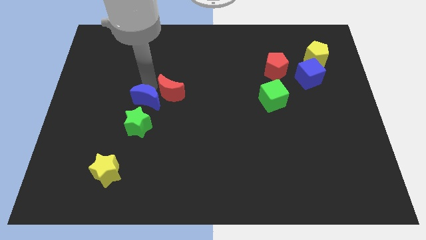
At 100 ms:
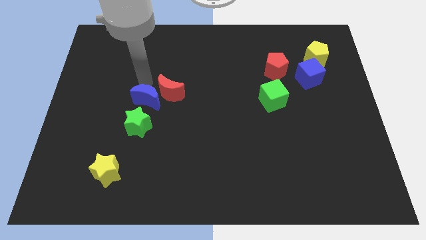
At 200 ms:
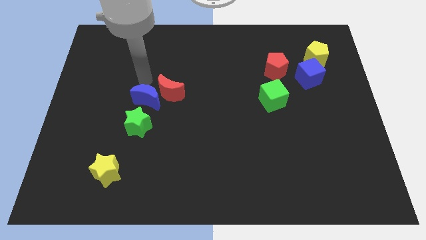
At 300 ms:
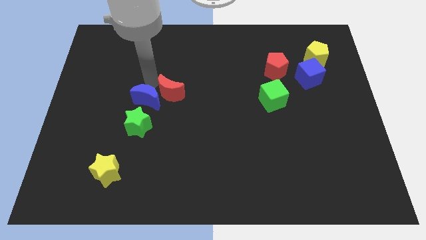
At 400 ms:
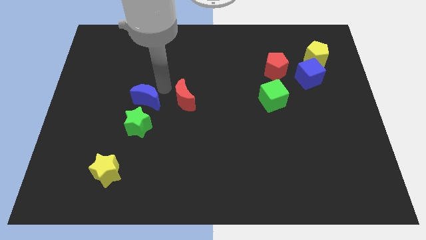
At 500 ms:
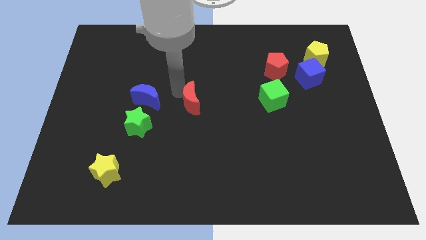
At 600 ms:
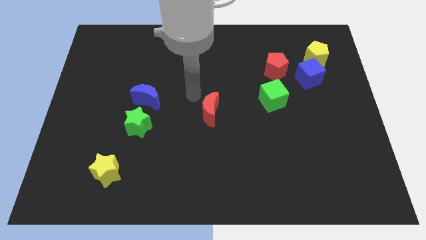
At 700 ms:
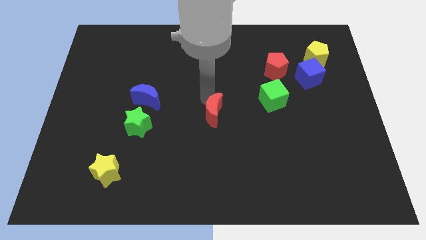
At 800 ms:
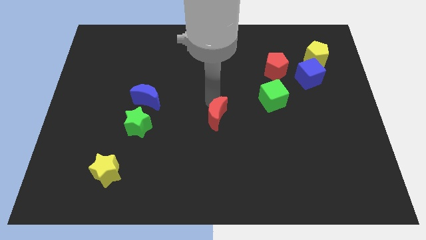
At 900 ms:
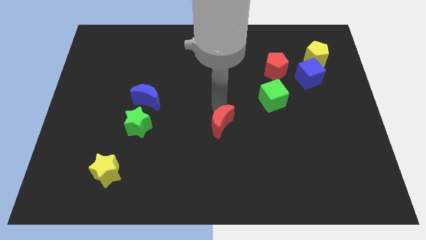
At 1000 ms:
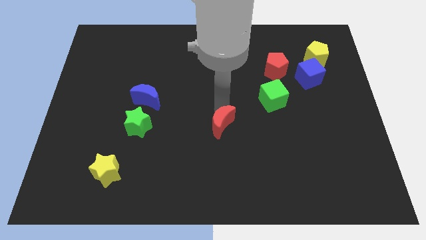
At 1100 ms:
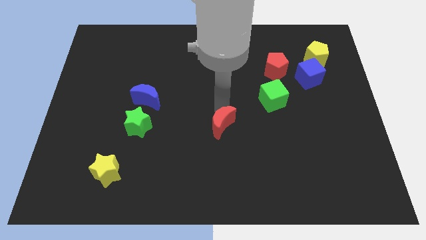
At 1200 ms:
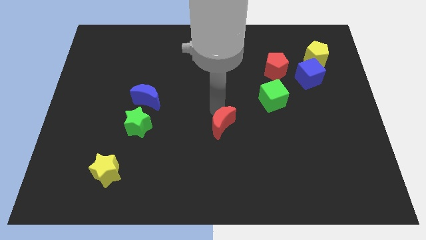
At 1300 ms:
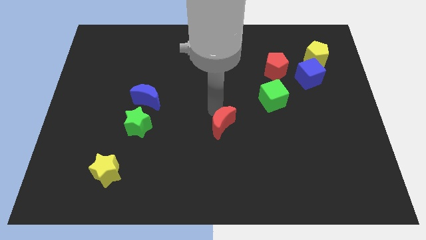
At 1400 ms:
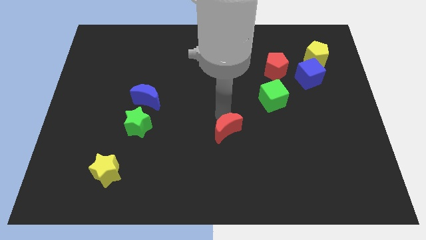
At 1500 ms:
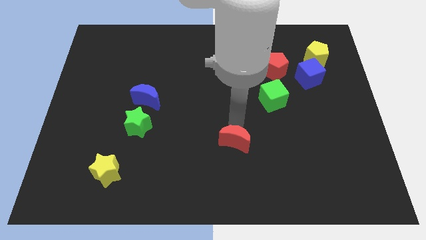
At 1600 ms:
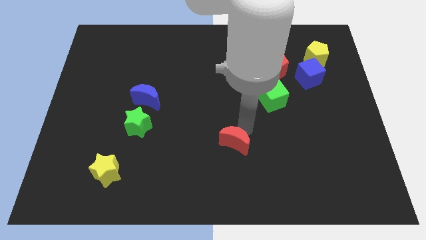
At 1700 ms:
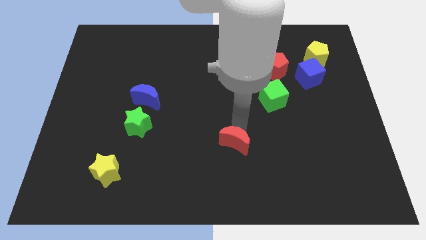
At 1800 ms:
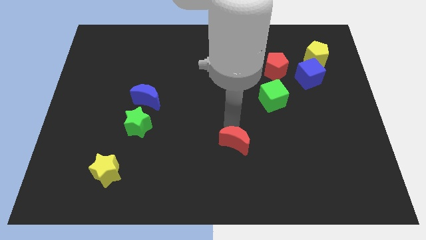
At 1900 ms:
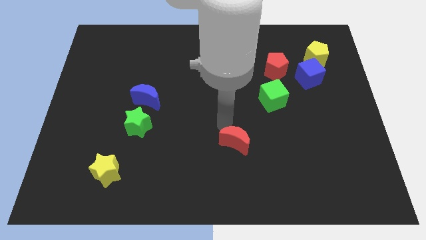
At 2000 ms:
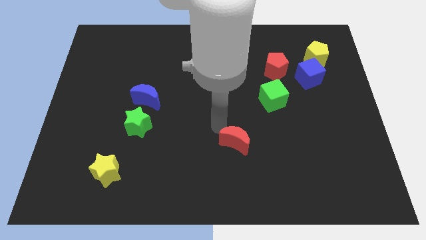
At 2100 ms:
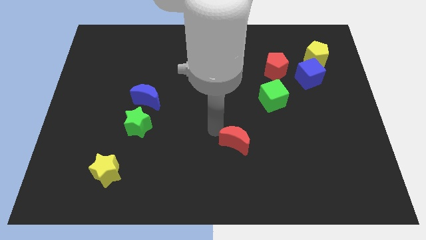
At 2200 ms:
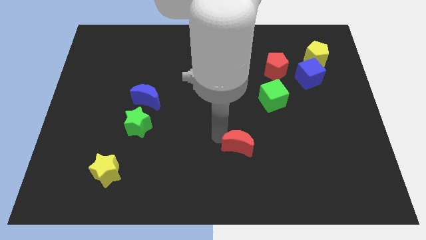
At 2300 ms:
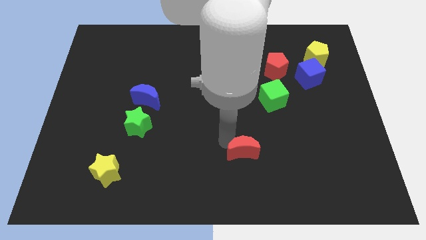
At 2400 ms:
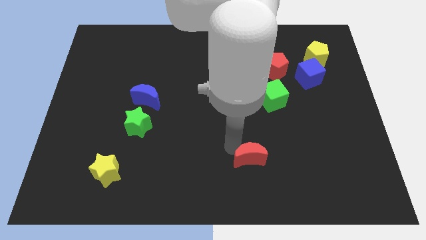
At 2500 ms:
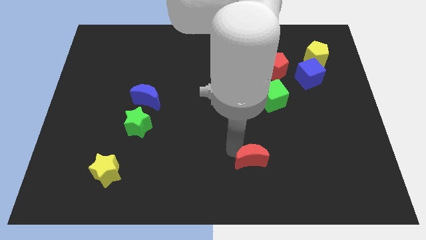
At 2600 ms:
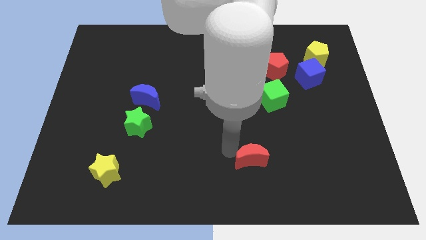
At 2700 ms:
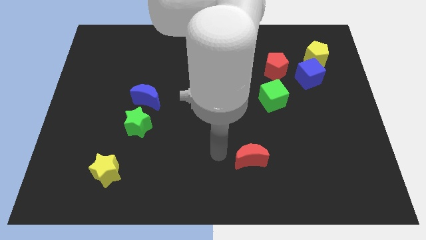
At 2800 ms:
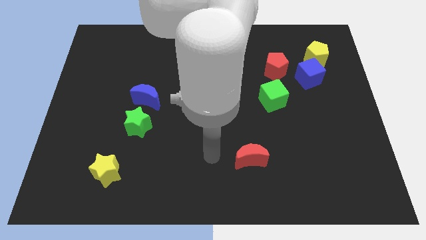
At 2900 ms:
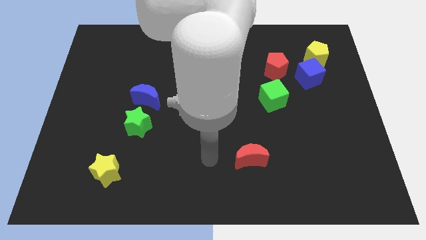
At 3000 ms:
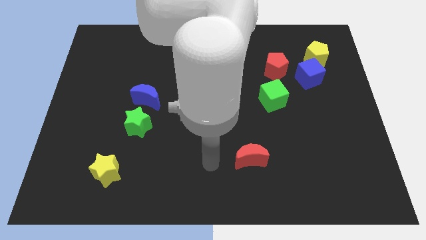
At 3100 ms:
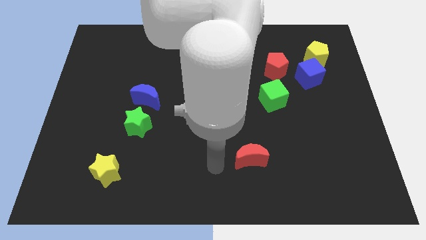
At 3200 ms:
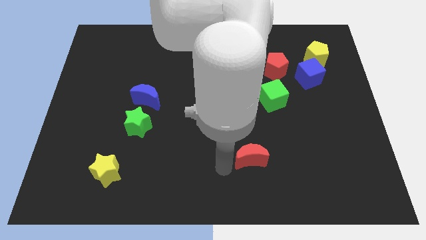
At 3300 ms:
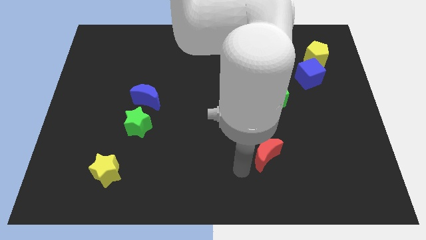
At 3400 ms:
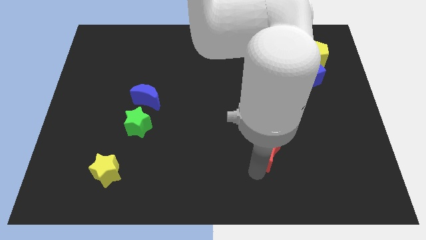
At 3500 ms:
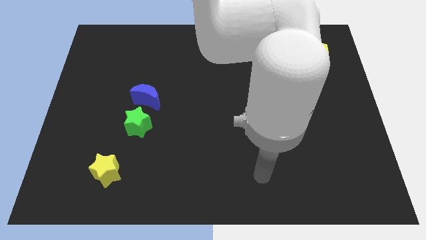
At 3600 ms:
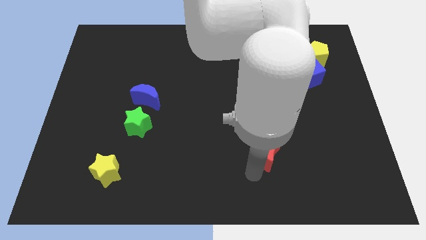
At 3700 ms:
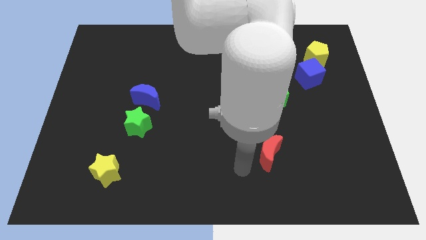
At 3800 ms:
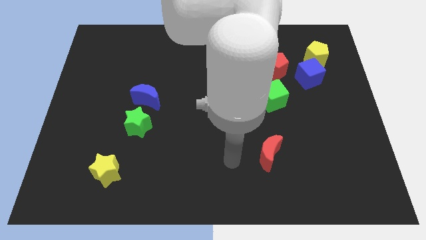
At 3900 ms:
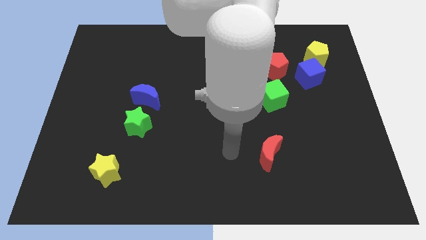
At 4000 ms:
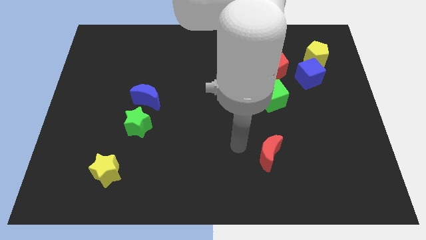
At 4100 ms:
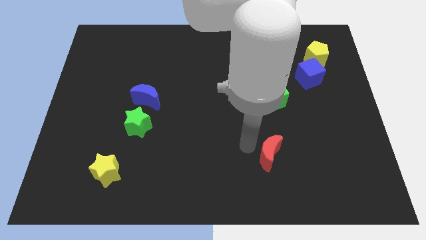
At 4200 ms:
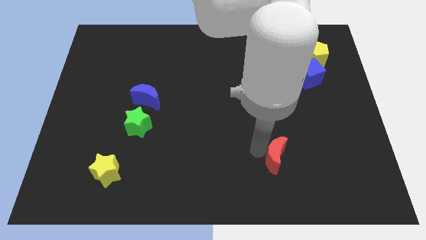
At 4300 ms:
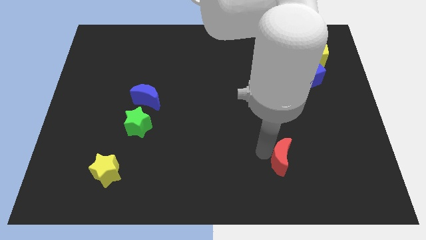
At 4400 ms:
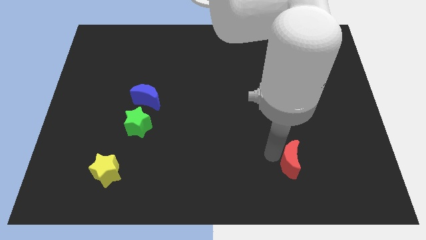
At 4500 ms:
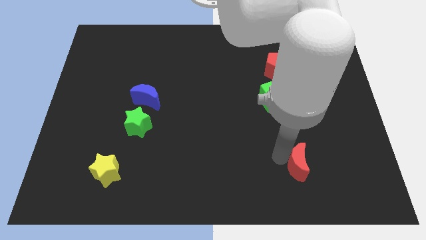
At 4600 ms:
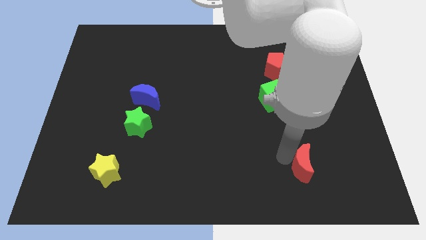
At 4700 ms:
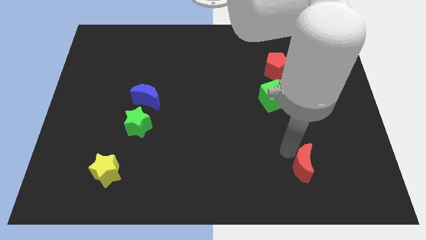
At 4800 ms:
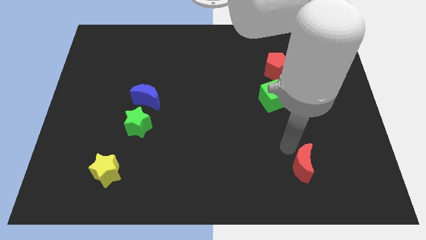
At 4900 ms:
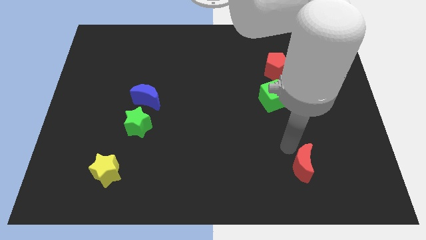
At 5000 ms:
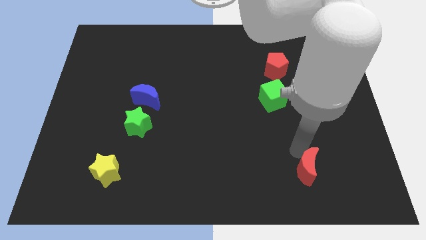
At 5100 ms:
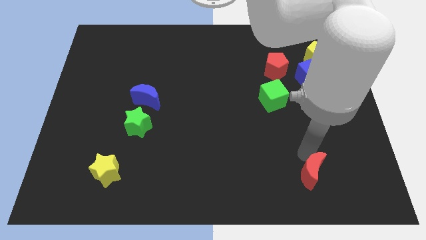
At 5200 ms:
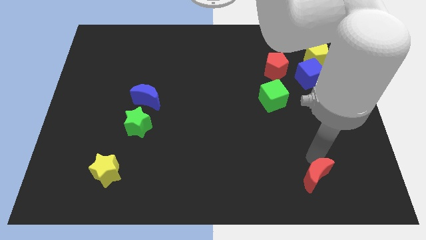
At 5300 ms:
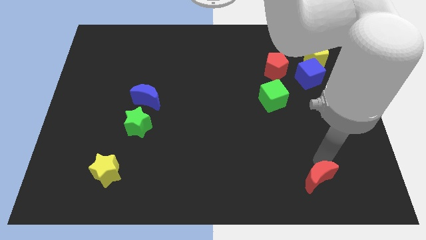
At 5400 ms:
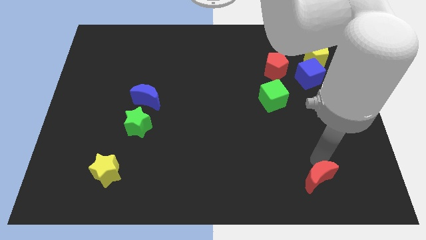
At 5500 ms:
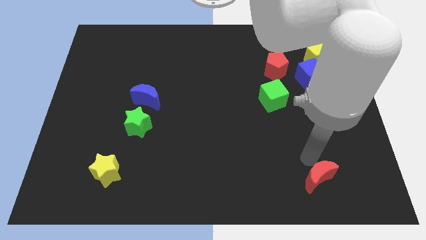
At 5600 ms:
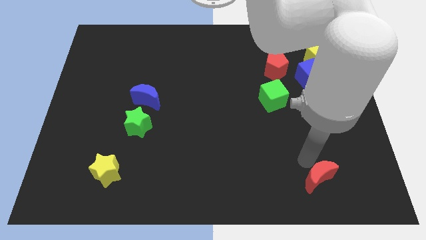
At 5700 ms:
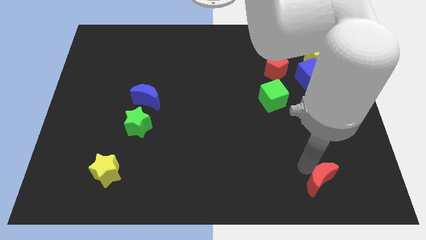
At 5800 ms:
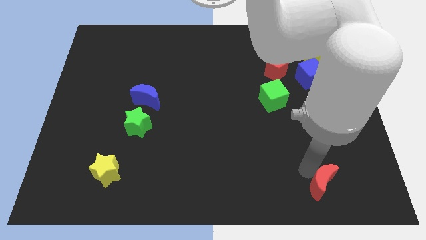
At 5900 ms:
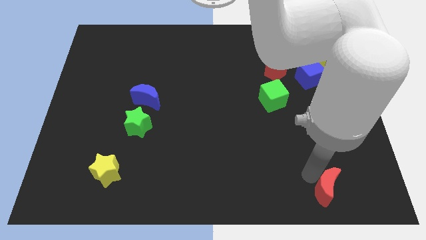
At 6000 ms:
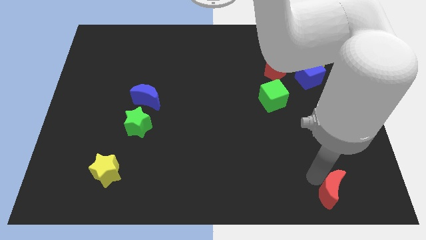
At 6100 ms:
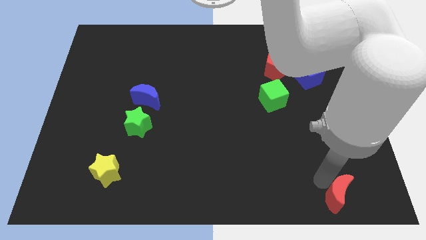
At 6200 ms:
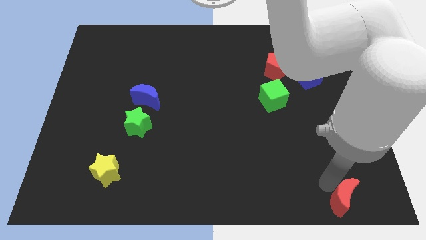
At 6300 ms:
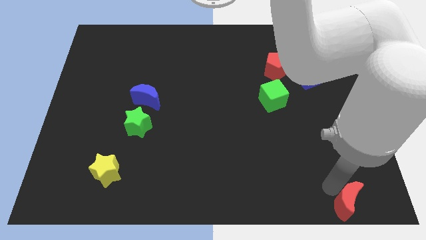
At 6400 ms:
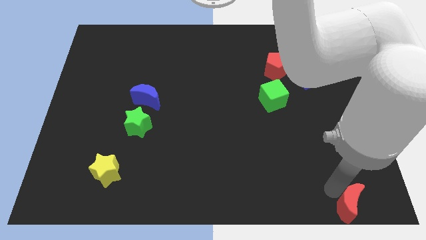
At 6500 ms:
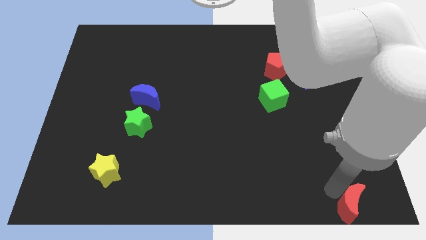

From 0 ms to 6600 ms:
push the red moon to the bottom right side of the board

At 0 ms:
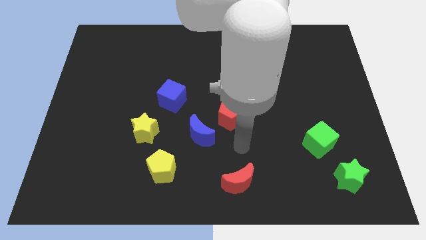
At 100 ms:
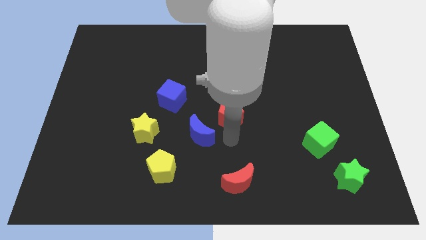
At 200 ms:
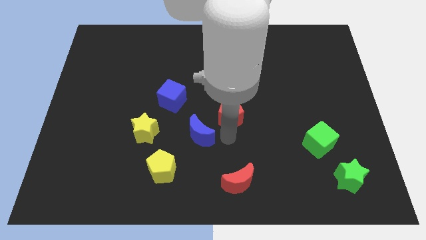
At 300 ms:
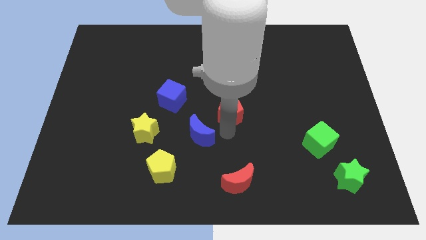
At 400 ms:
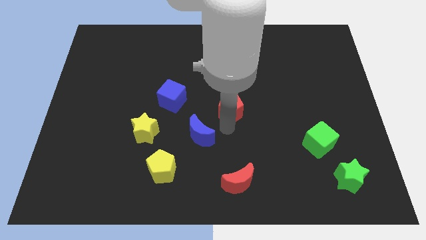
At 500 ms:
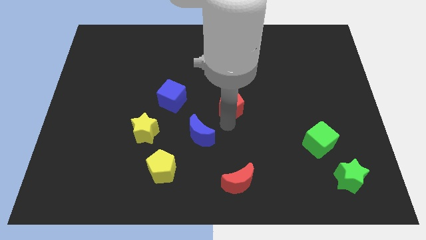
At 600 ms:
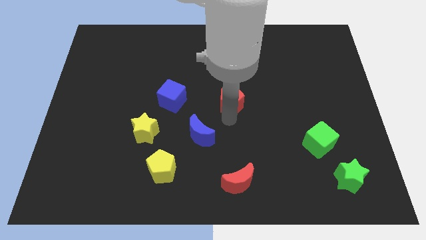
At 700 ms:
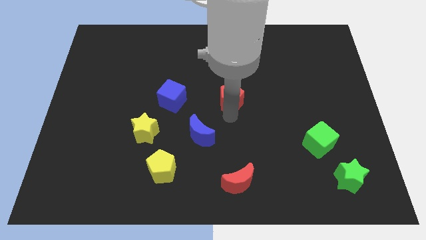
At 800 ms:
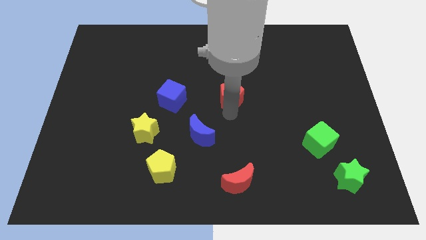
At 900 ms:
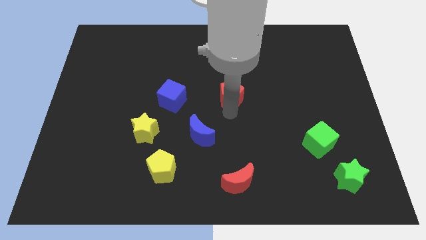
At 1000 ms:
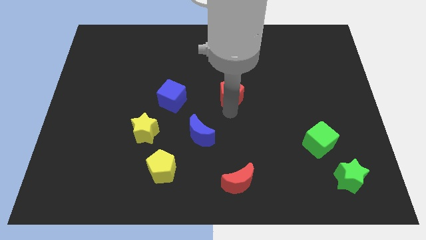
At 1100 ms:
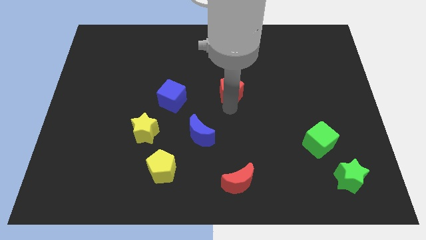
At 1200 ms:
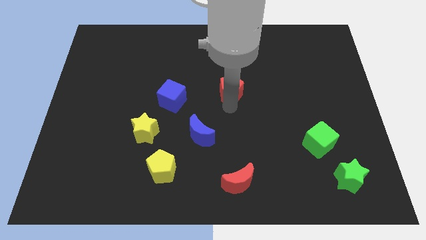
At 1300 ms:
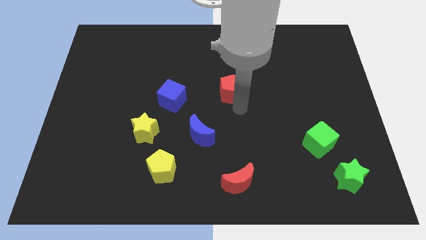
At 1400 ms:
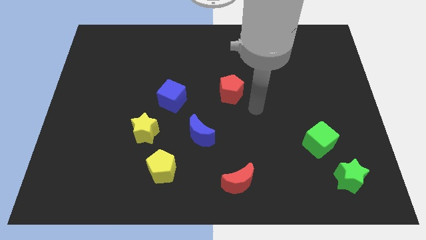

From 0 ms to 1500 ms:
drag the red pentagon to the top

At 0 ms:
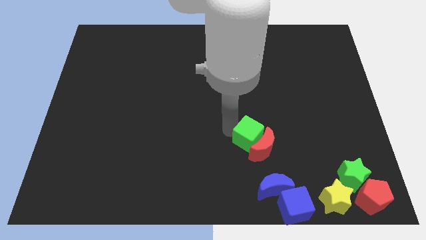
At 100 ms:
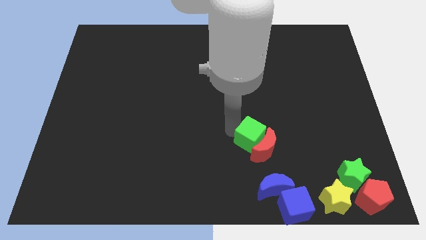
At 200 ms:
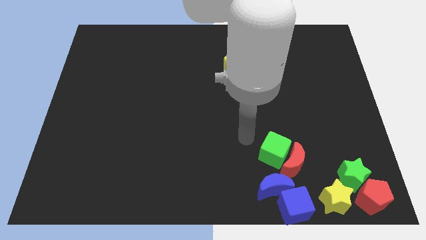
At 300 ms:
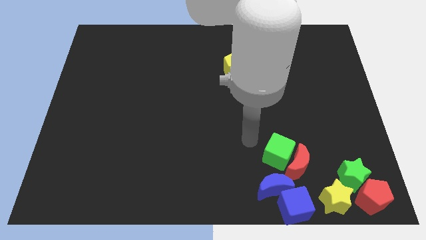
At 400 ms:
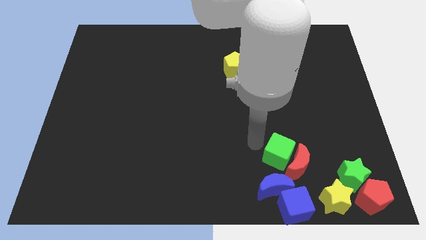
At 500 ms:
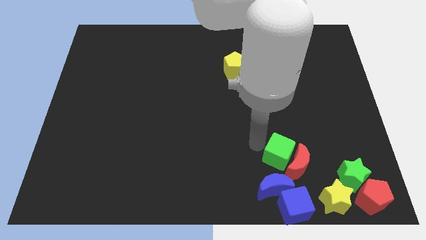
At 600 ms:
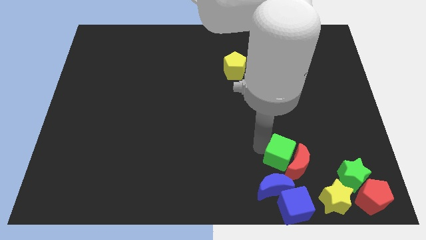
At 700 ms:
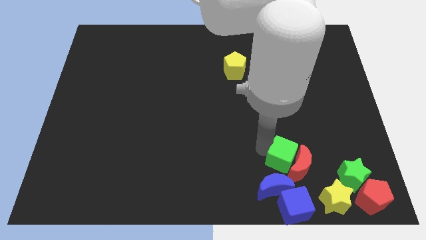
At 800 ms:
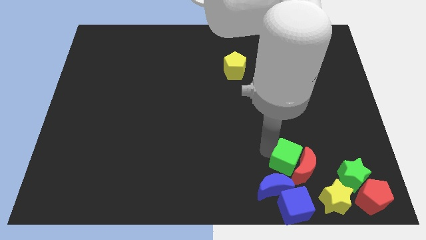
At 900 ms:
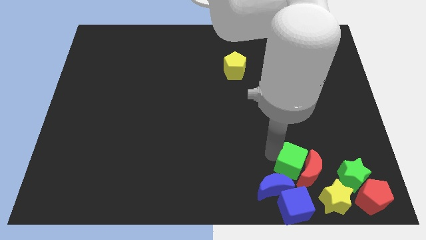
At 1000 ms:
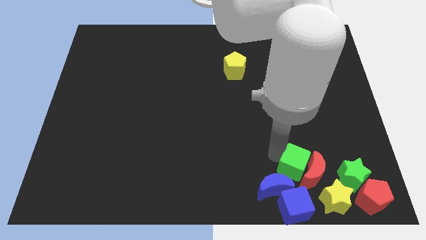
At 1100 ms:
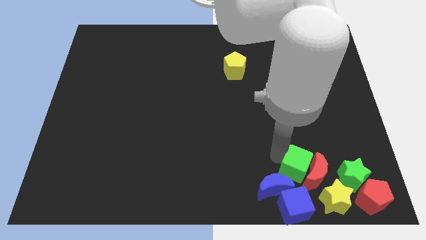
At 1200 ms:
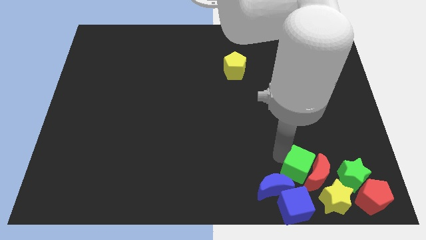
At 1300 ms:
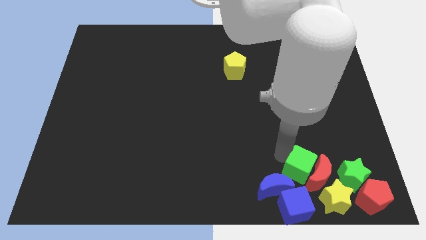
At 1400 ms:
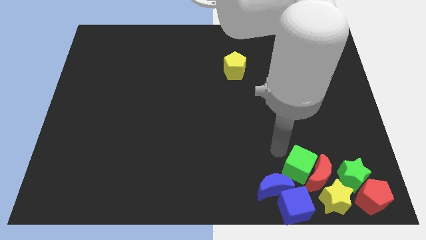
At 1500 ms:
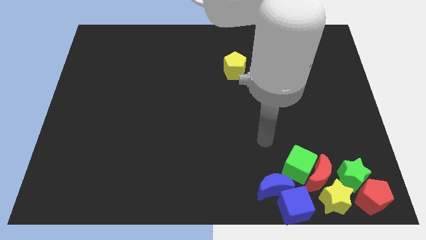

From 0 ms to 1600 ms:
push the green cubered crescent towards the group of blocks
